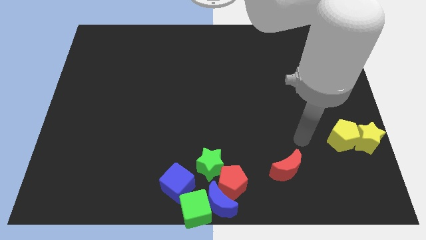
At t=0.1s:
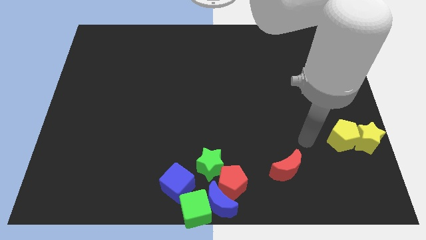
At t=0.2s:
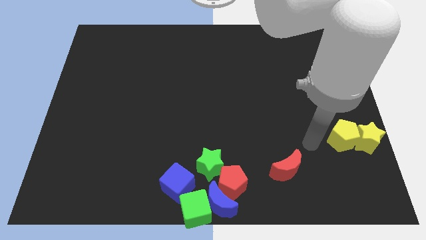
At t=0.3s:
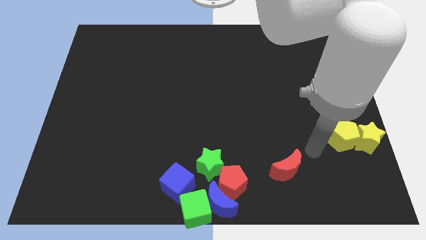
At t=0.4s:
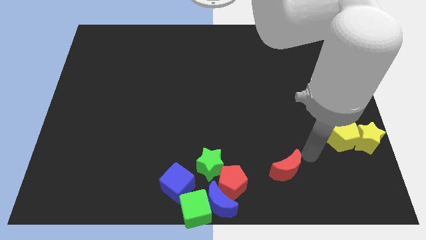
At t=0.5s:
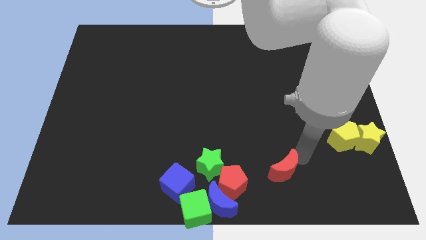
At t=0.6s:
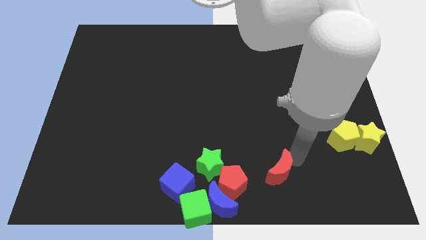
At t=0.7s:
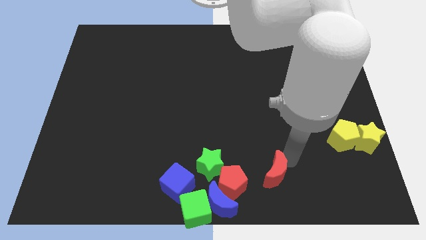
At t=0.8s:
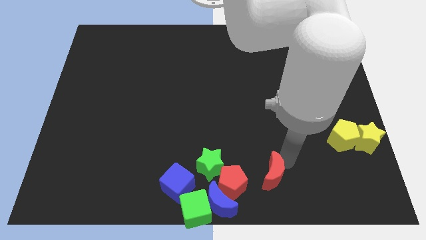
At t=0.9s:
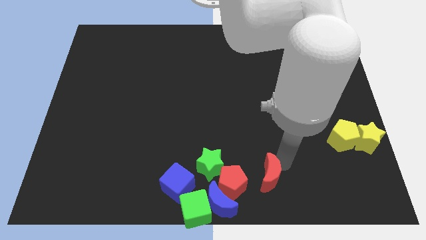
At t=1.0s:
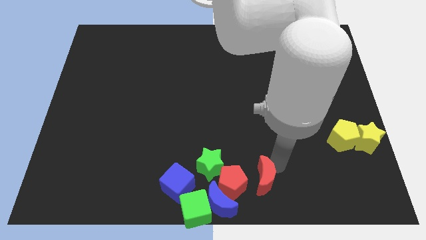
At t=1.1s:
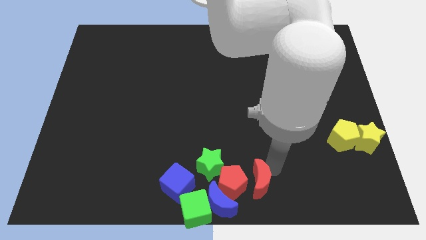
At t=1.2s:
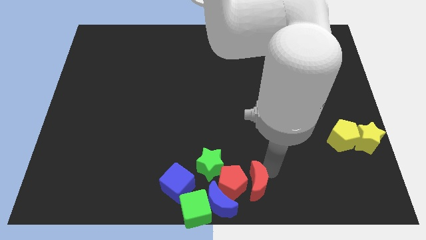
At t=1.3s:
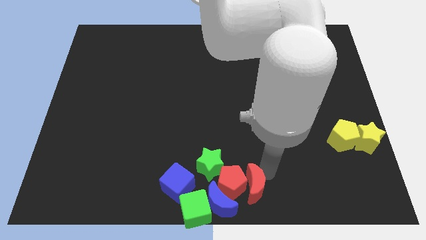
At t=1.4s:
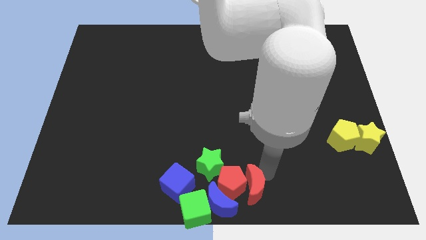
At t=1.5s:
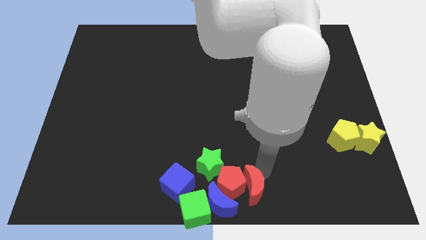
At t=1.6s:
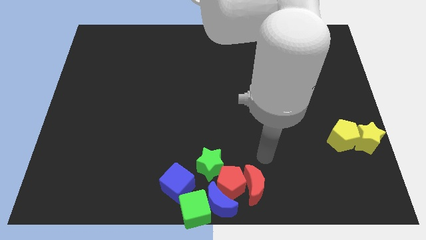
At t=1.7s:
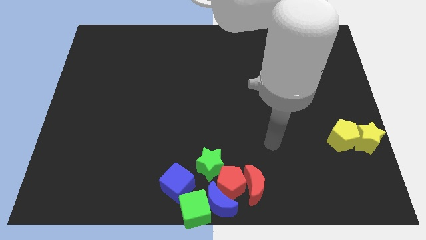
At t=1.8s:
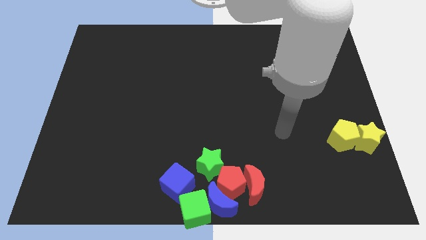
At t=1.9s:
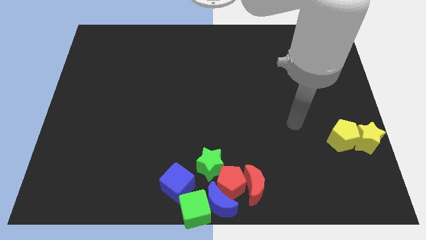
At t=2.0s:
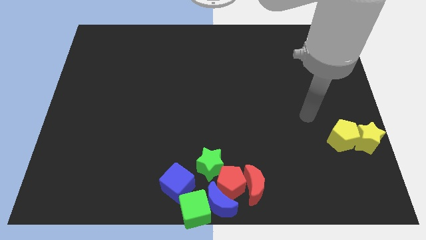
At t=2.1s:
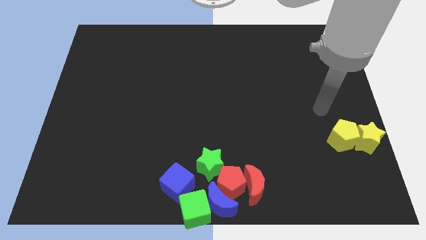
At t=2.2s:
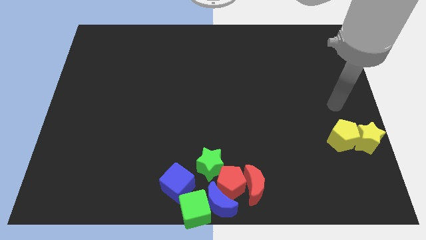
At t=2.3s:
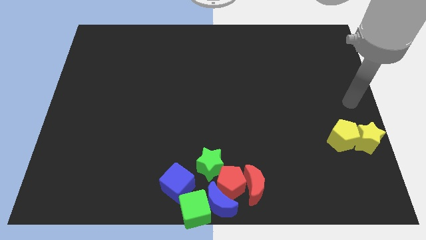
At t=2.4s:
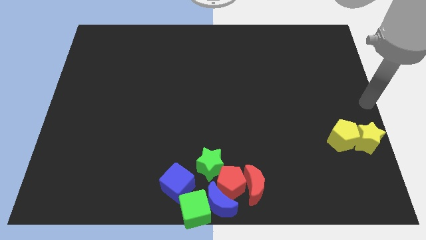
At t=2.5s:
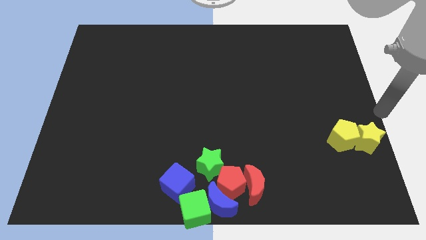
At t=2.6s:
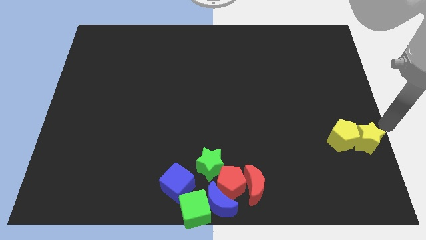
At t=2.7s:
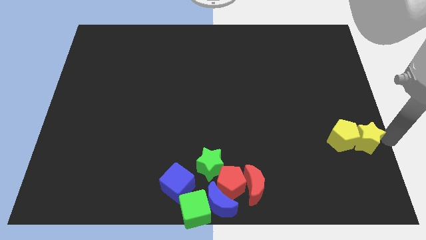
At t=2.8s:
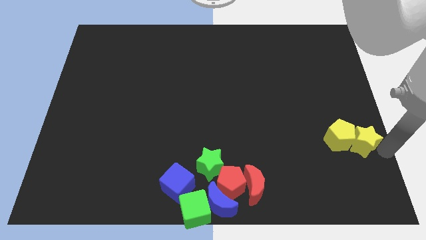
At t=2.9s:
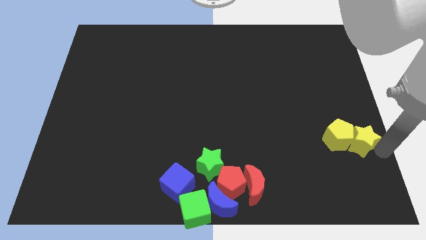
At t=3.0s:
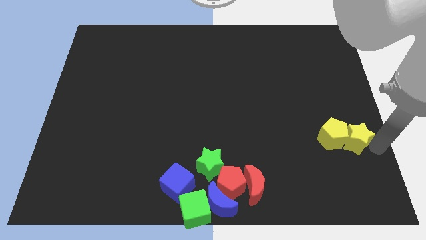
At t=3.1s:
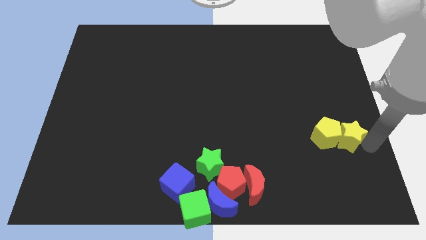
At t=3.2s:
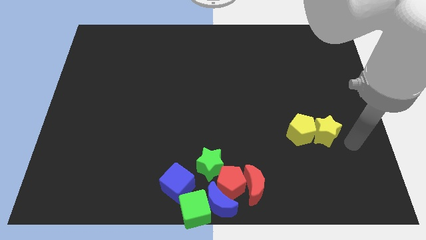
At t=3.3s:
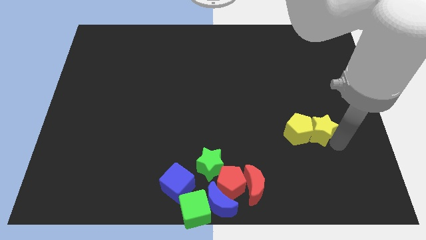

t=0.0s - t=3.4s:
move yellow star along with yellow pentagon slightly towards center

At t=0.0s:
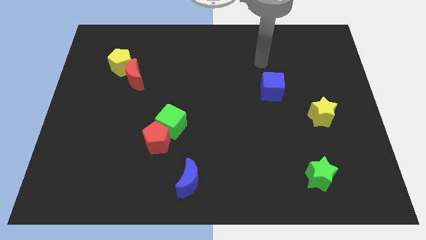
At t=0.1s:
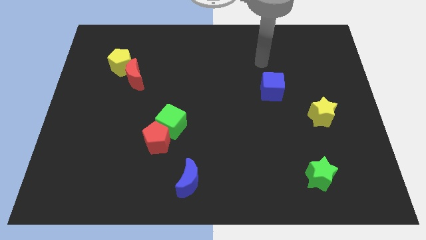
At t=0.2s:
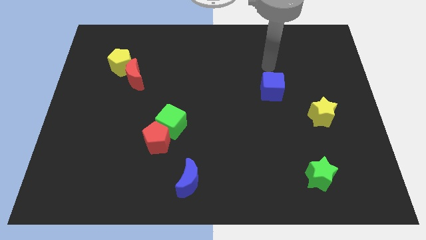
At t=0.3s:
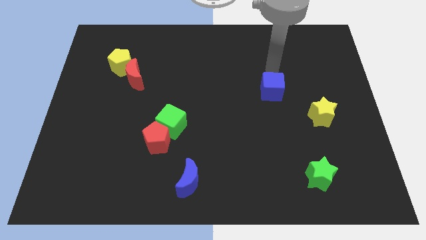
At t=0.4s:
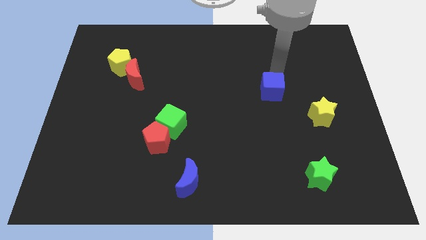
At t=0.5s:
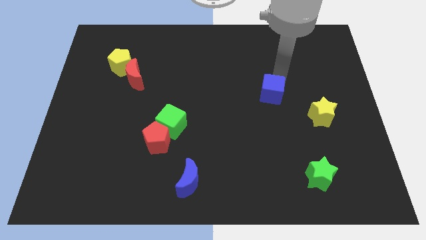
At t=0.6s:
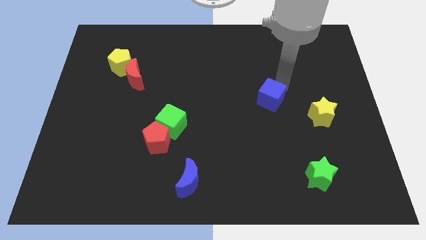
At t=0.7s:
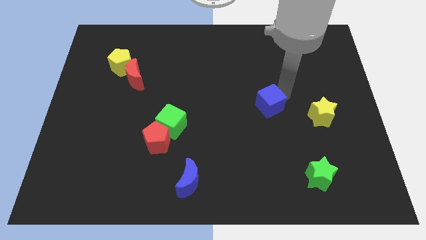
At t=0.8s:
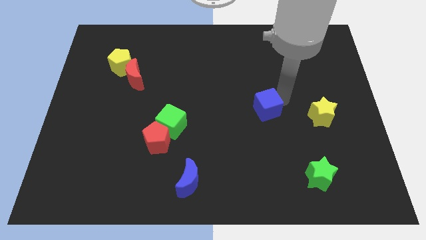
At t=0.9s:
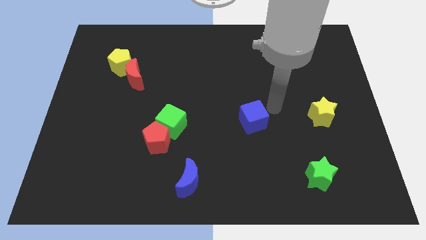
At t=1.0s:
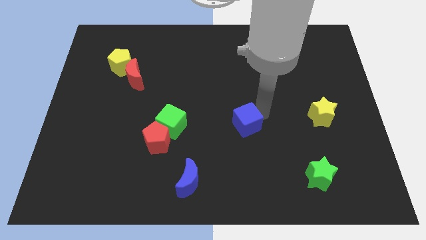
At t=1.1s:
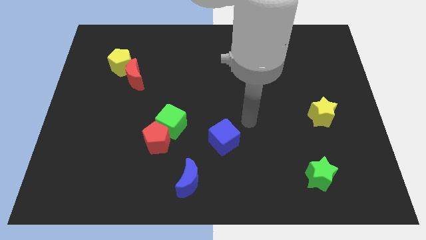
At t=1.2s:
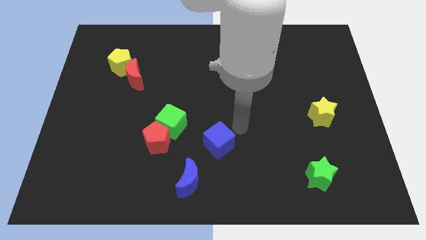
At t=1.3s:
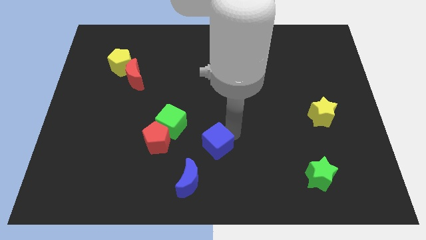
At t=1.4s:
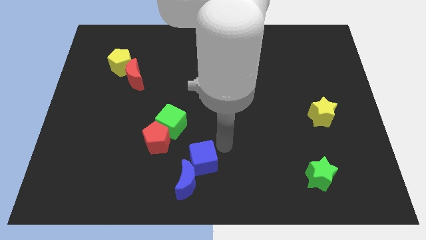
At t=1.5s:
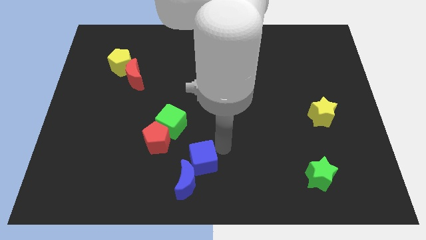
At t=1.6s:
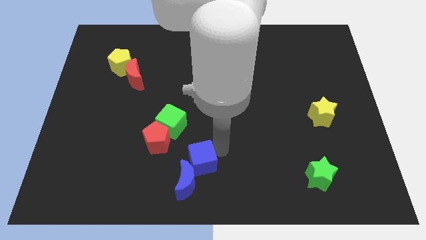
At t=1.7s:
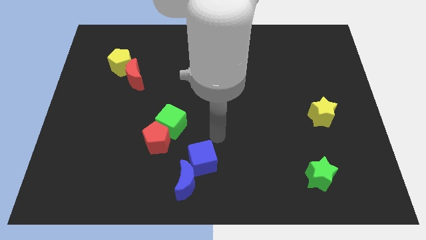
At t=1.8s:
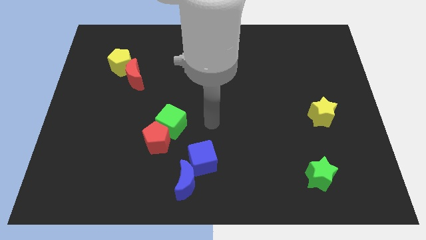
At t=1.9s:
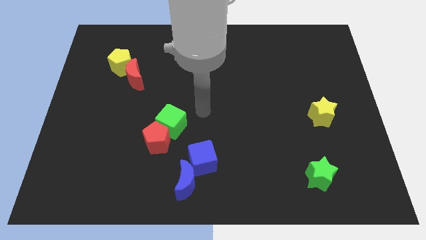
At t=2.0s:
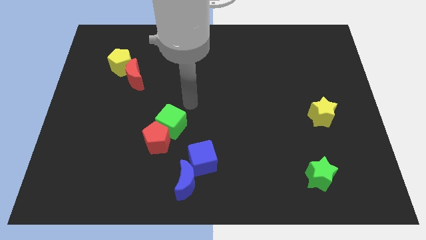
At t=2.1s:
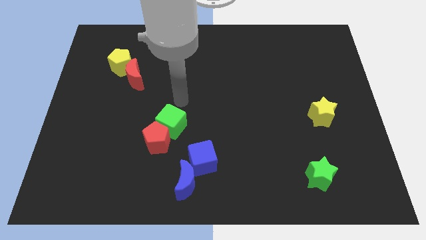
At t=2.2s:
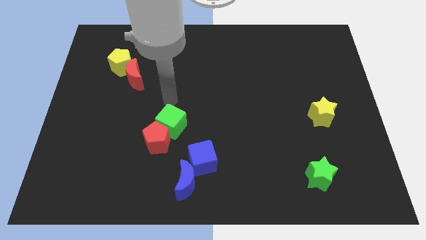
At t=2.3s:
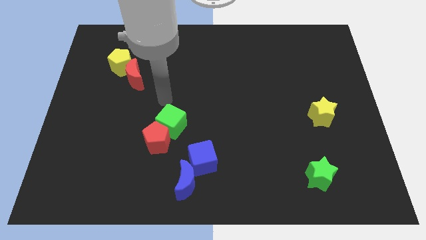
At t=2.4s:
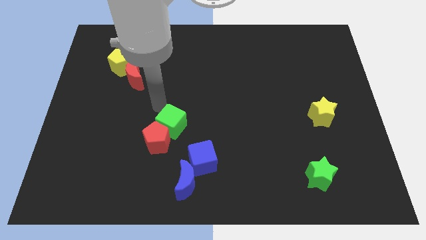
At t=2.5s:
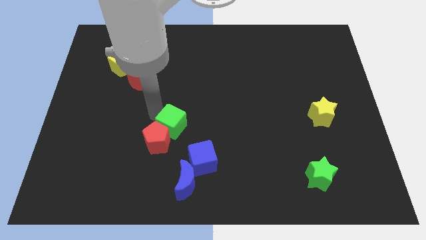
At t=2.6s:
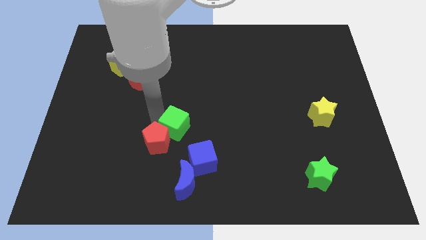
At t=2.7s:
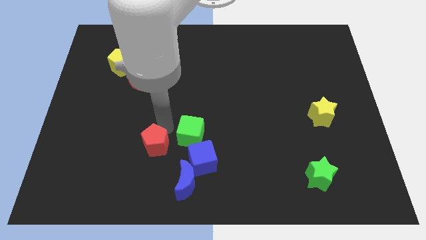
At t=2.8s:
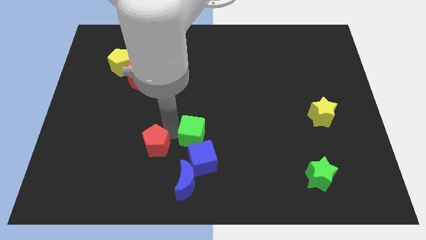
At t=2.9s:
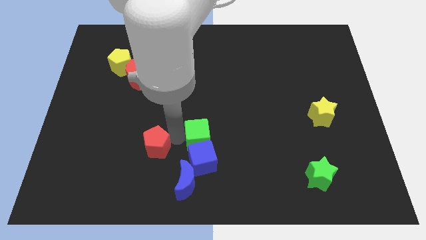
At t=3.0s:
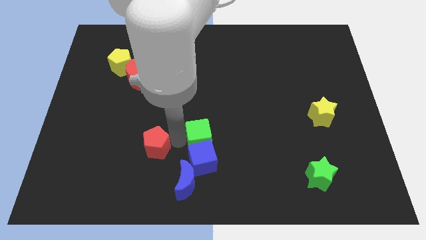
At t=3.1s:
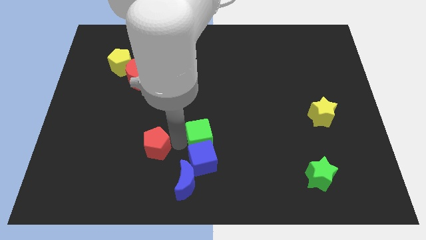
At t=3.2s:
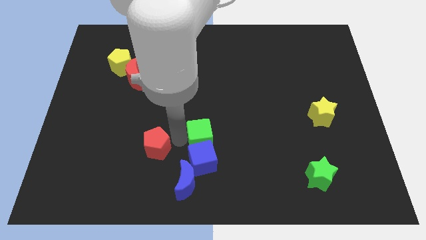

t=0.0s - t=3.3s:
place green cube to the top of blue cube

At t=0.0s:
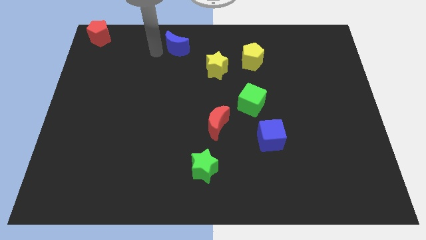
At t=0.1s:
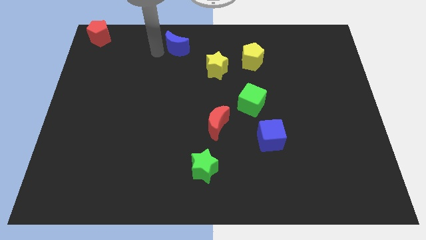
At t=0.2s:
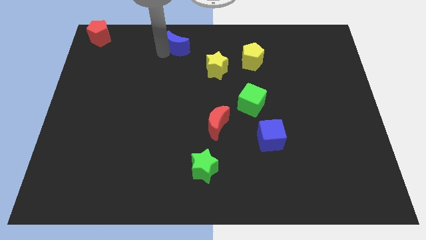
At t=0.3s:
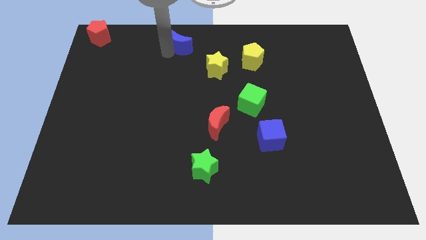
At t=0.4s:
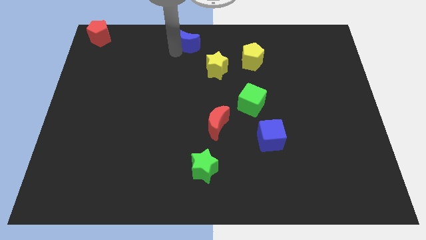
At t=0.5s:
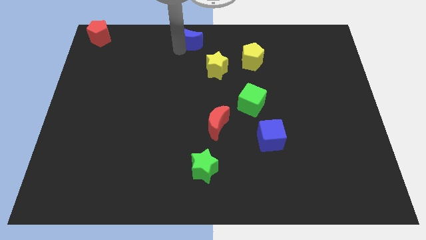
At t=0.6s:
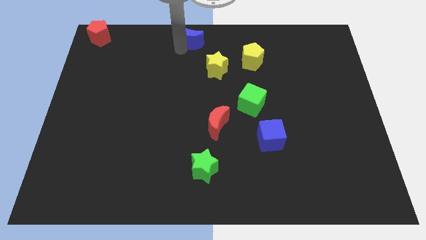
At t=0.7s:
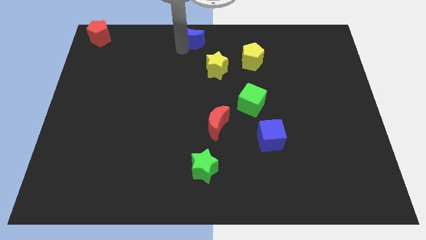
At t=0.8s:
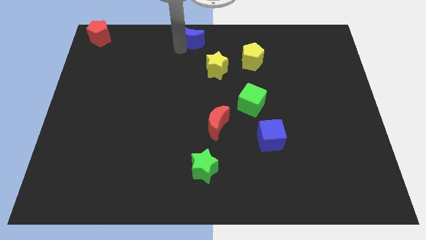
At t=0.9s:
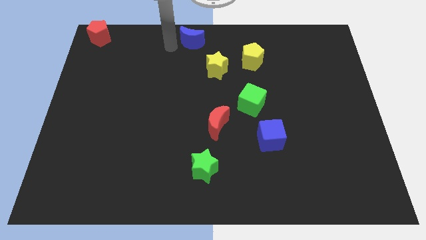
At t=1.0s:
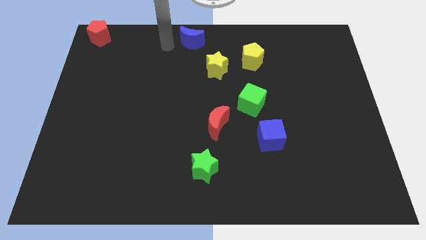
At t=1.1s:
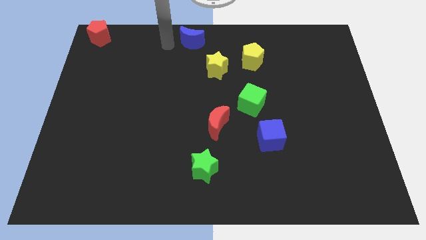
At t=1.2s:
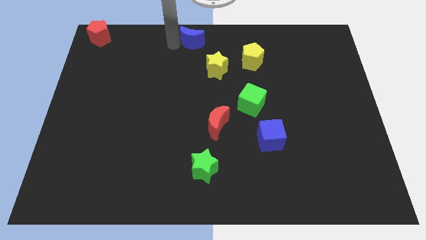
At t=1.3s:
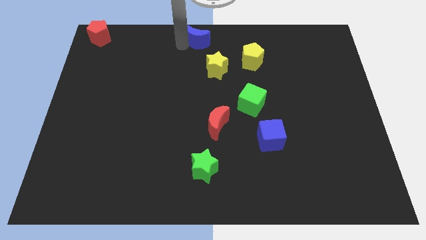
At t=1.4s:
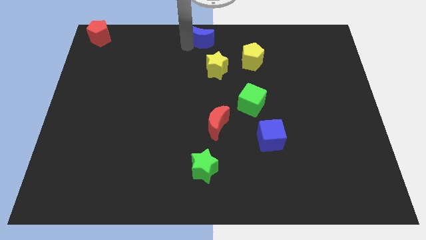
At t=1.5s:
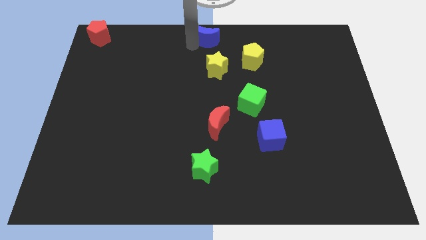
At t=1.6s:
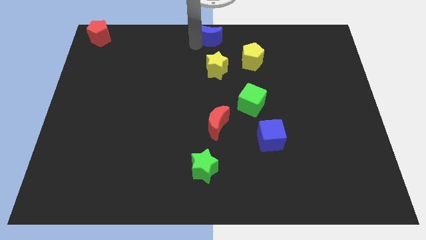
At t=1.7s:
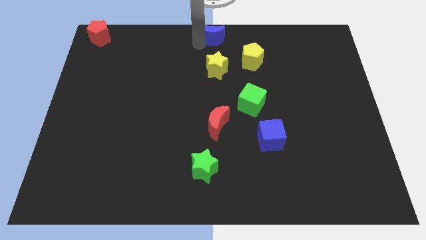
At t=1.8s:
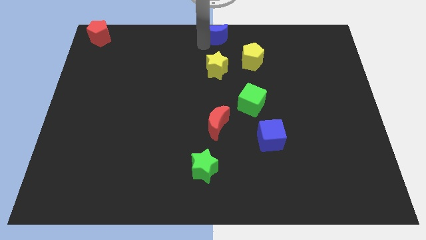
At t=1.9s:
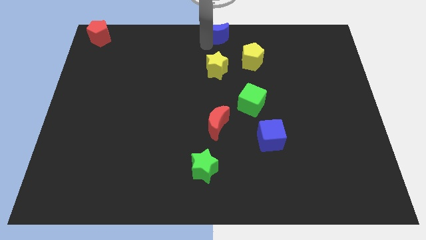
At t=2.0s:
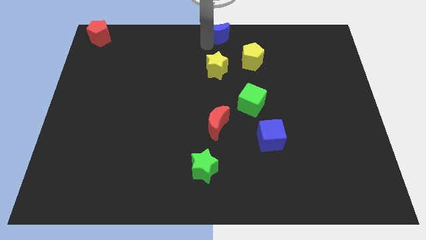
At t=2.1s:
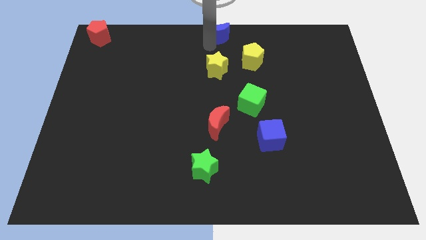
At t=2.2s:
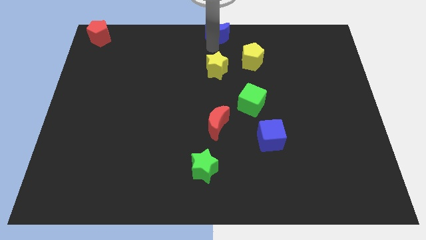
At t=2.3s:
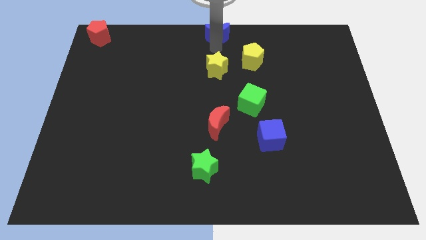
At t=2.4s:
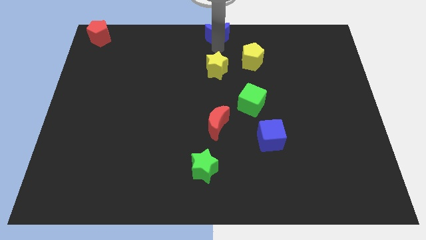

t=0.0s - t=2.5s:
place the blue crescent at top center of the board
